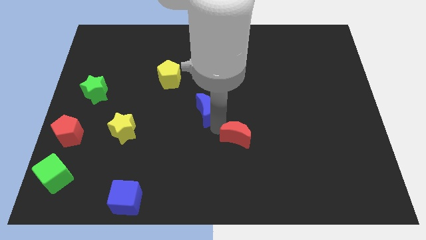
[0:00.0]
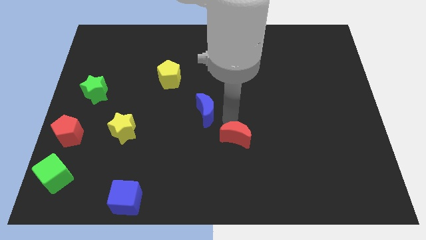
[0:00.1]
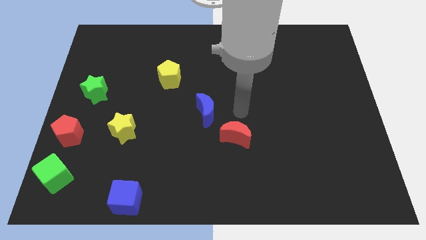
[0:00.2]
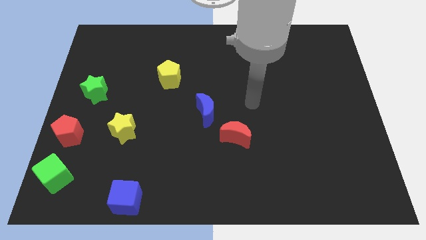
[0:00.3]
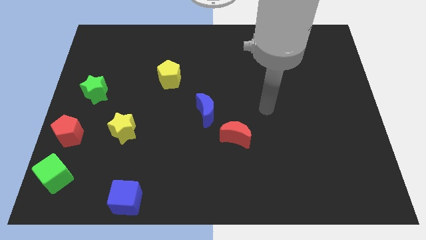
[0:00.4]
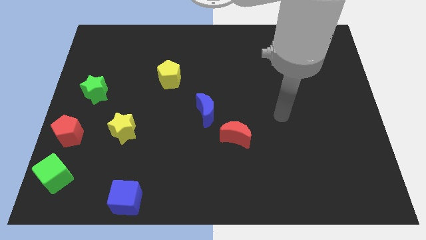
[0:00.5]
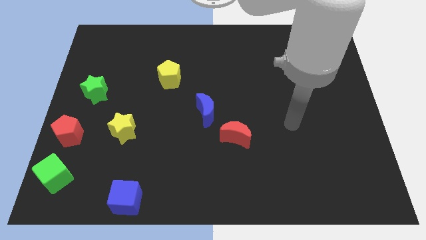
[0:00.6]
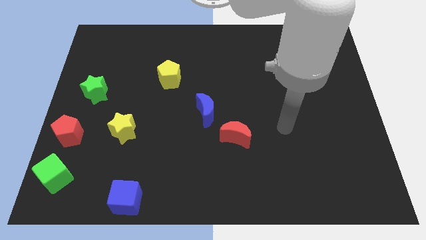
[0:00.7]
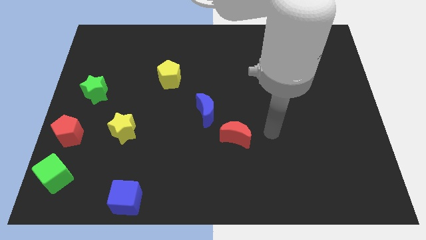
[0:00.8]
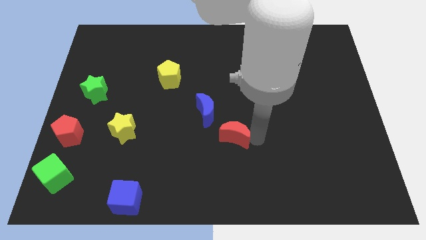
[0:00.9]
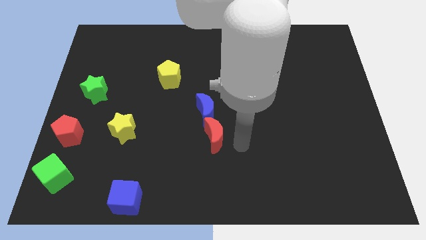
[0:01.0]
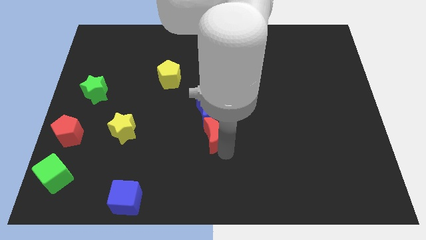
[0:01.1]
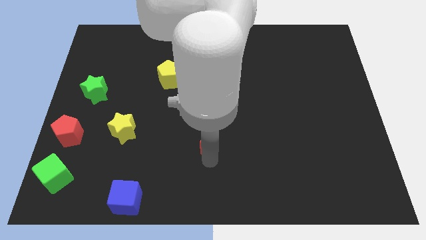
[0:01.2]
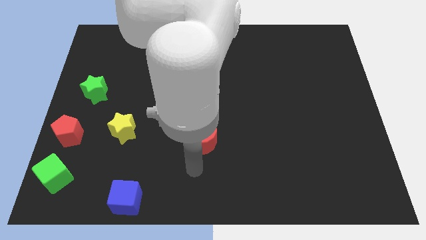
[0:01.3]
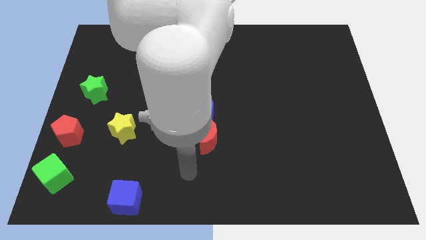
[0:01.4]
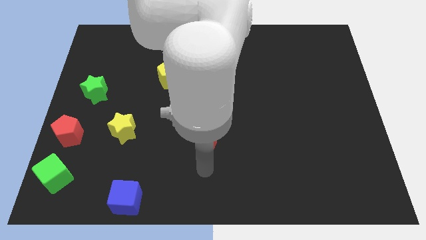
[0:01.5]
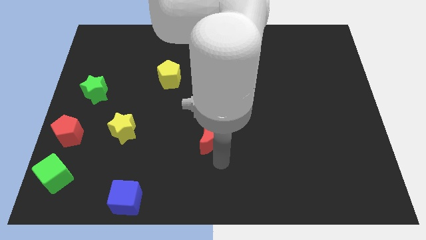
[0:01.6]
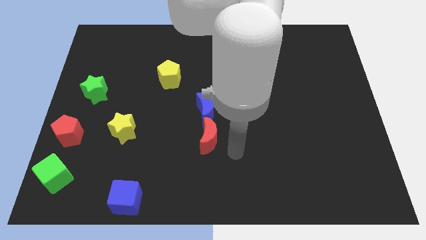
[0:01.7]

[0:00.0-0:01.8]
move the red crescent to the bottom of the blue crescent

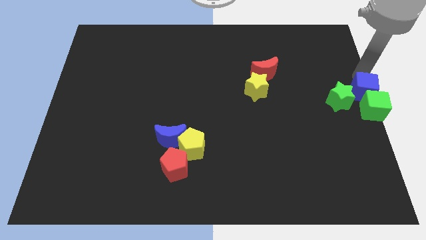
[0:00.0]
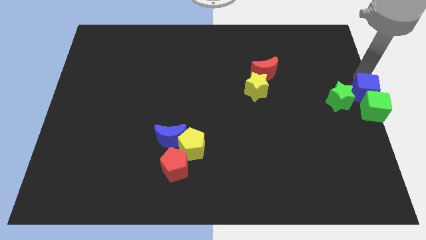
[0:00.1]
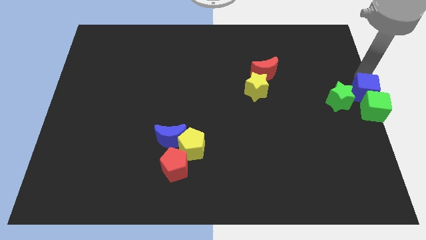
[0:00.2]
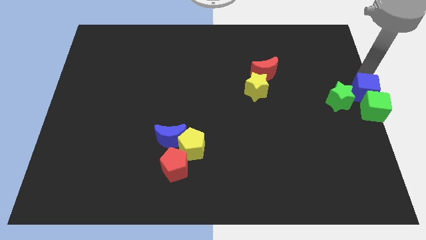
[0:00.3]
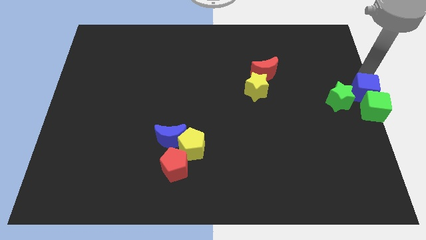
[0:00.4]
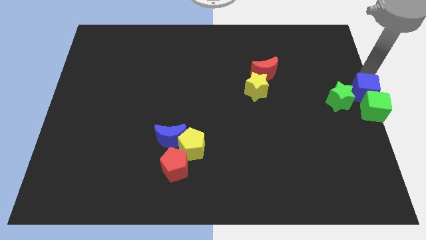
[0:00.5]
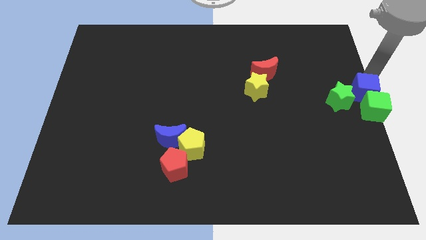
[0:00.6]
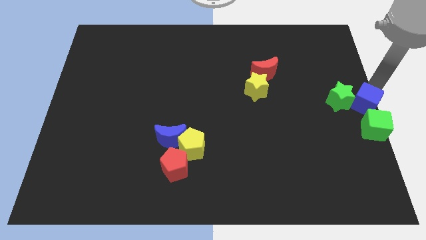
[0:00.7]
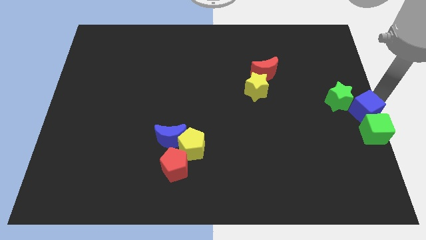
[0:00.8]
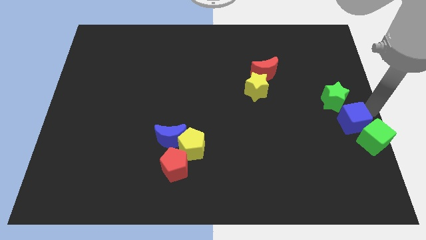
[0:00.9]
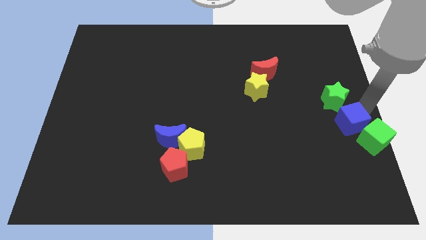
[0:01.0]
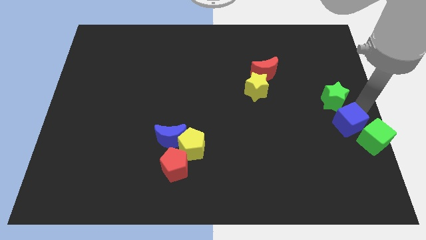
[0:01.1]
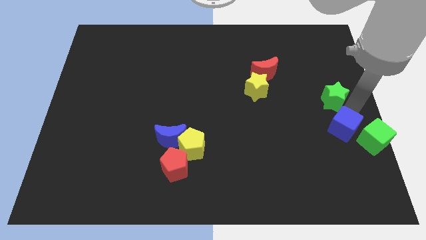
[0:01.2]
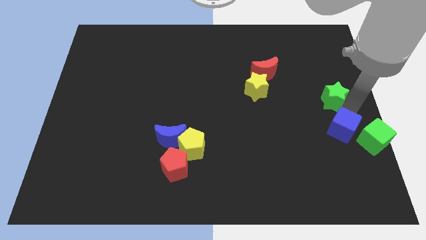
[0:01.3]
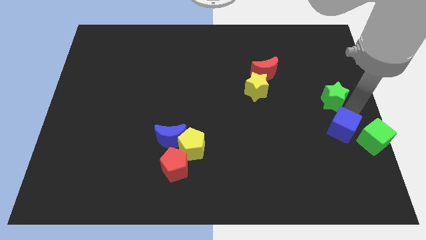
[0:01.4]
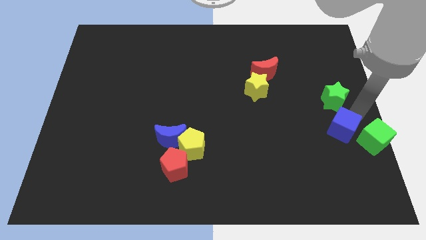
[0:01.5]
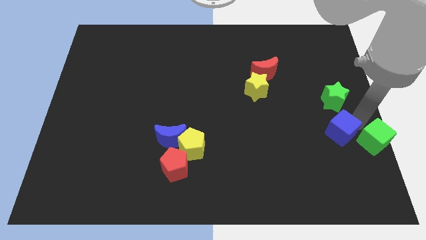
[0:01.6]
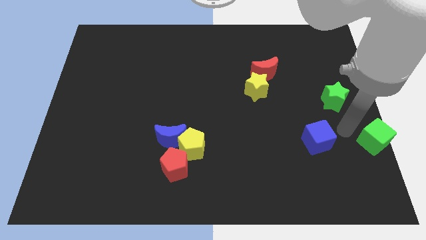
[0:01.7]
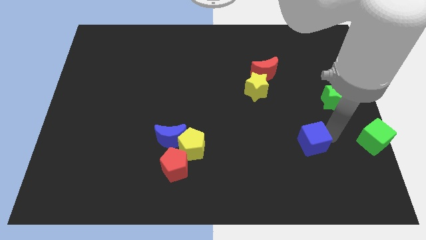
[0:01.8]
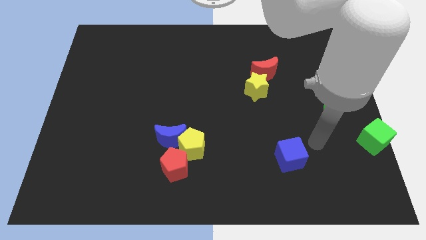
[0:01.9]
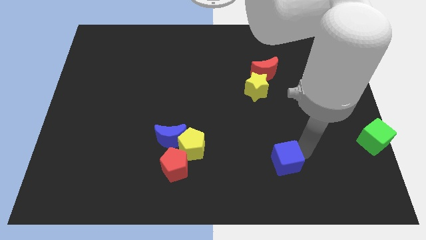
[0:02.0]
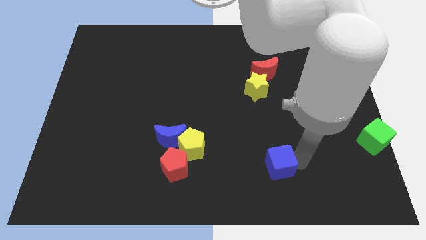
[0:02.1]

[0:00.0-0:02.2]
push the blue cube parallel right to the red pentagon

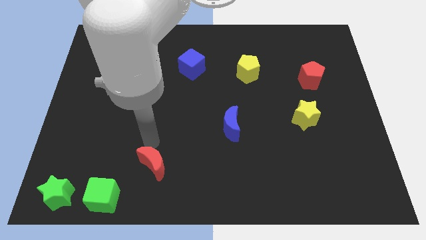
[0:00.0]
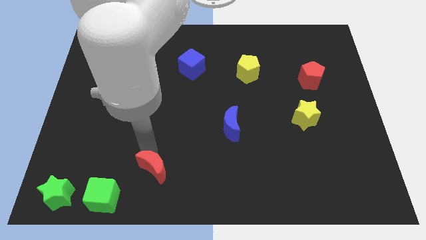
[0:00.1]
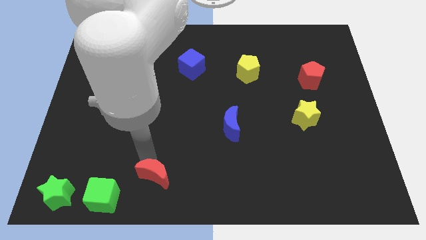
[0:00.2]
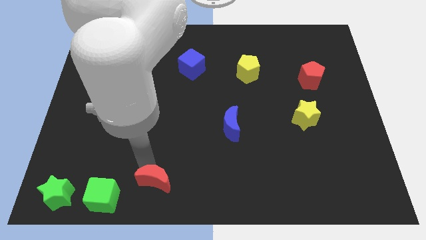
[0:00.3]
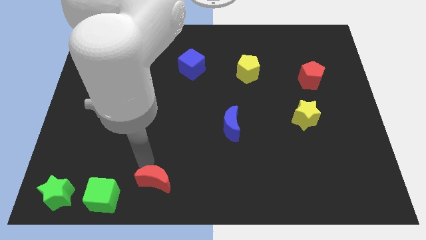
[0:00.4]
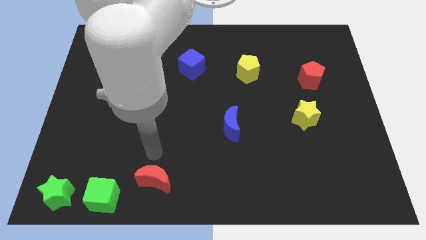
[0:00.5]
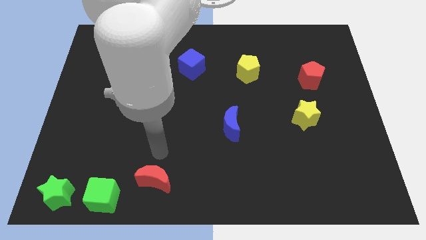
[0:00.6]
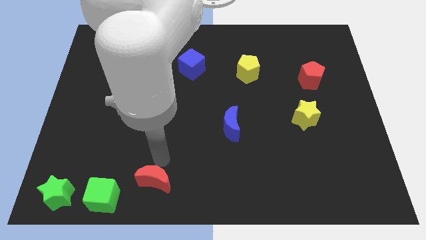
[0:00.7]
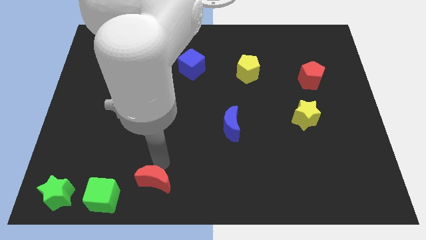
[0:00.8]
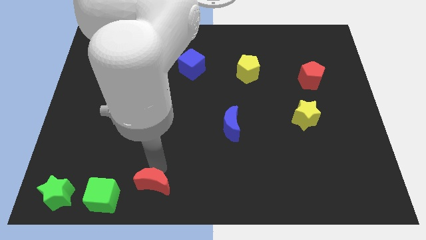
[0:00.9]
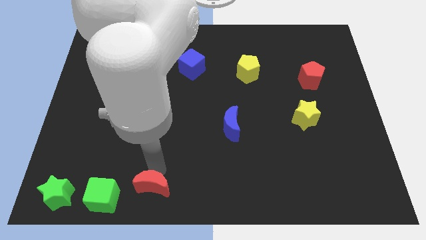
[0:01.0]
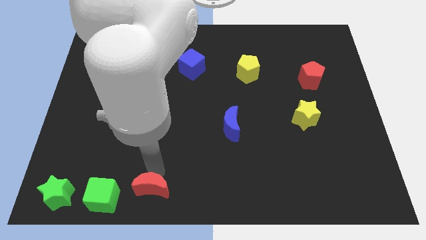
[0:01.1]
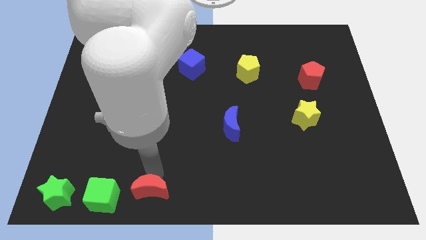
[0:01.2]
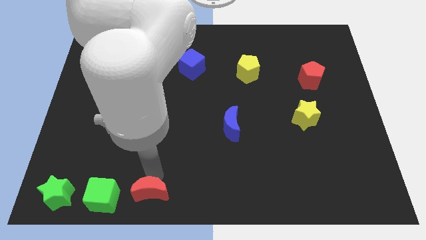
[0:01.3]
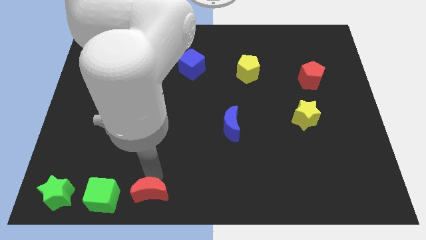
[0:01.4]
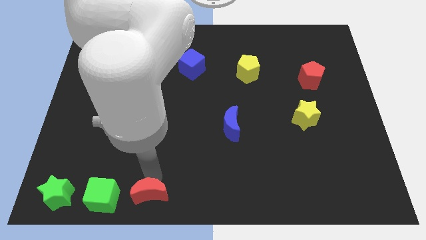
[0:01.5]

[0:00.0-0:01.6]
push the red crescent right to the green cube

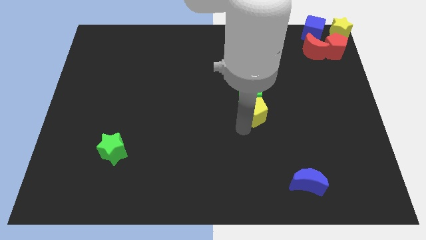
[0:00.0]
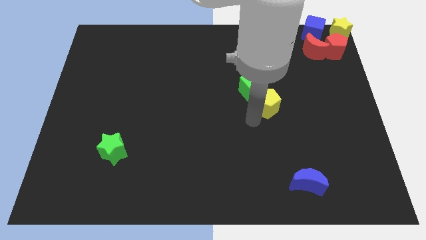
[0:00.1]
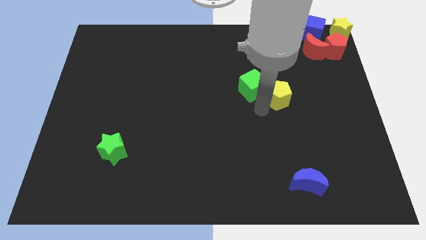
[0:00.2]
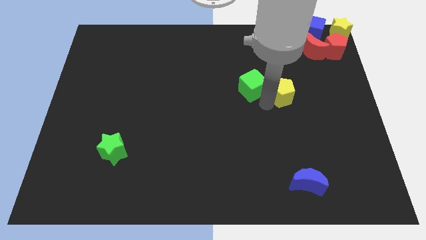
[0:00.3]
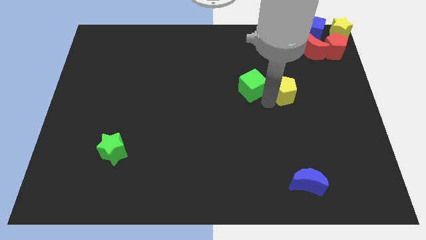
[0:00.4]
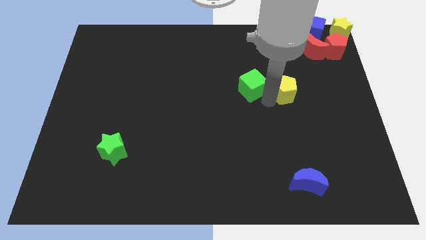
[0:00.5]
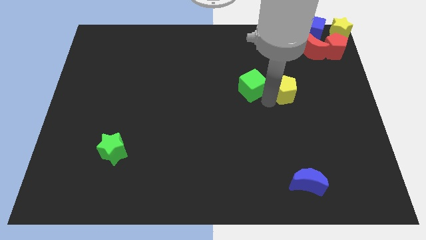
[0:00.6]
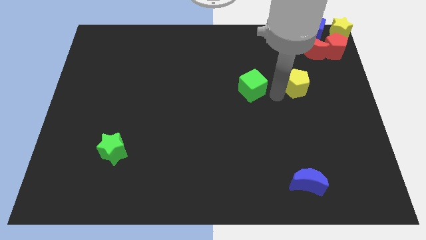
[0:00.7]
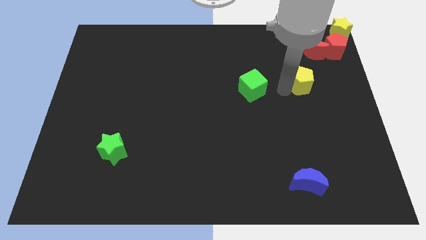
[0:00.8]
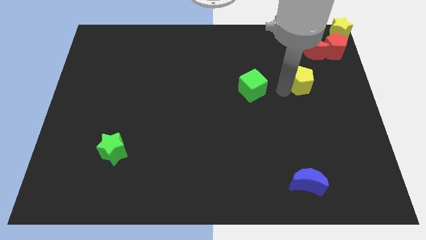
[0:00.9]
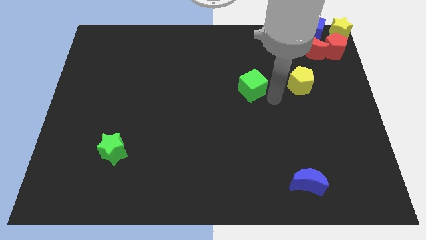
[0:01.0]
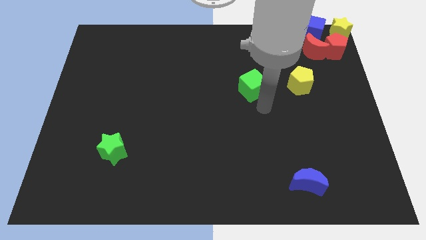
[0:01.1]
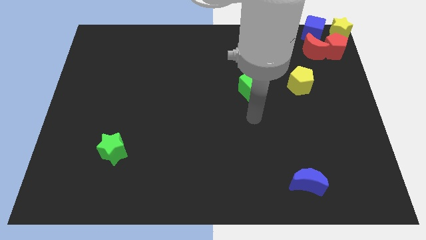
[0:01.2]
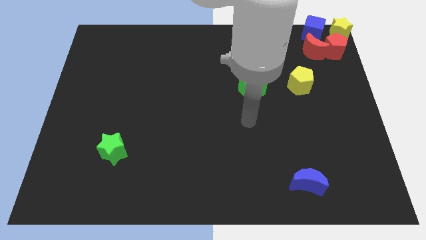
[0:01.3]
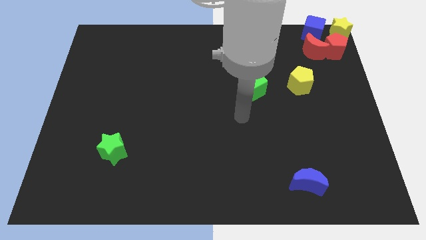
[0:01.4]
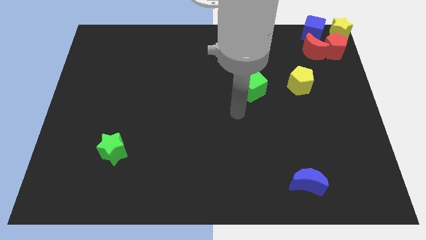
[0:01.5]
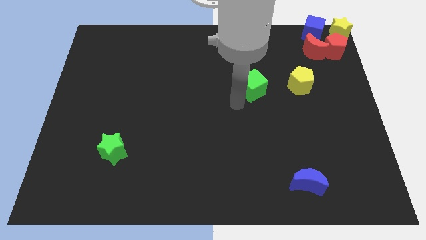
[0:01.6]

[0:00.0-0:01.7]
move yellow pentagon near to red crescent

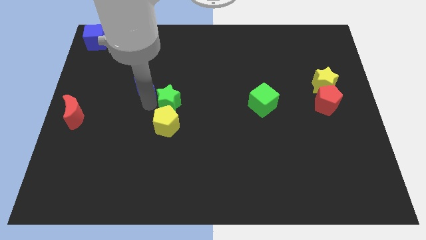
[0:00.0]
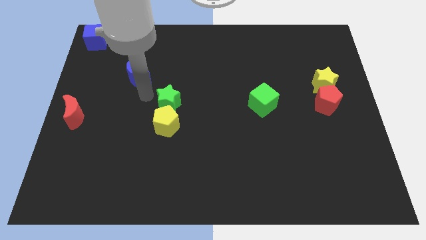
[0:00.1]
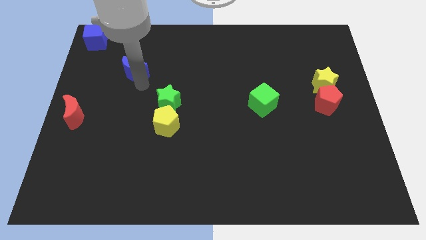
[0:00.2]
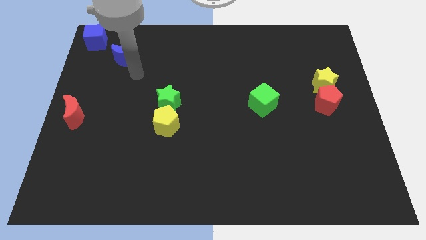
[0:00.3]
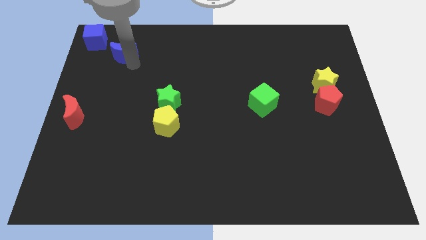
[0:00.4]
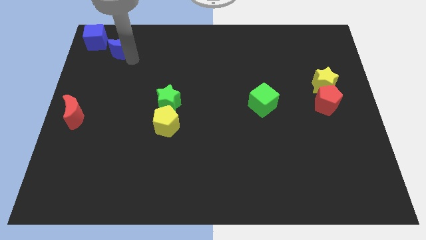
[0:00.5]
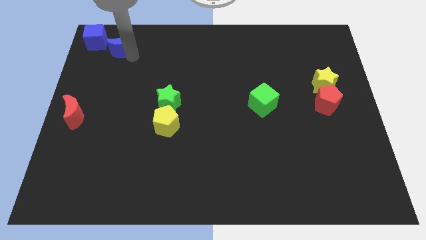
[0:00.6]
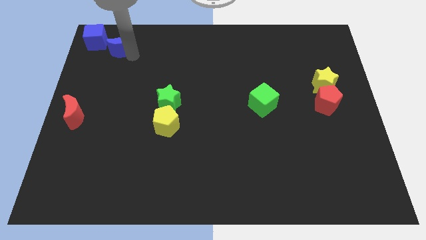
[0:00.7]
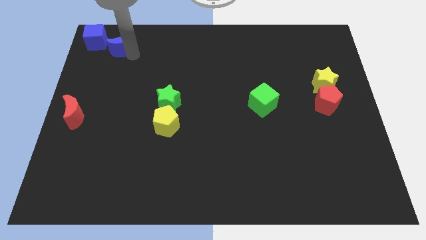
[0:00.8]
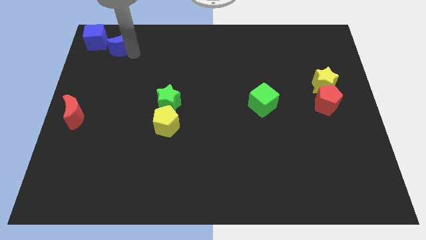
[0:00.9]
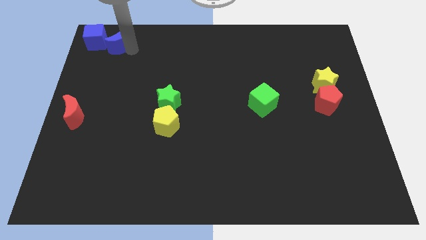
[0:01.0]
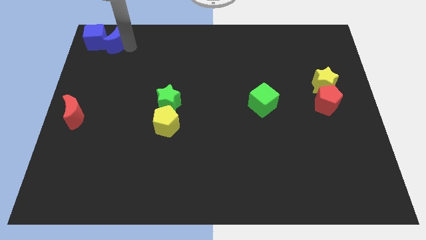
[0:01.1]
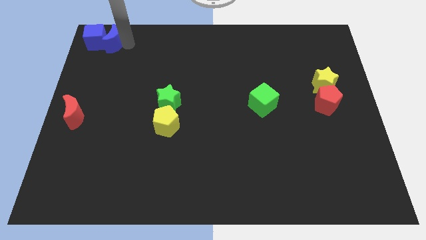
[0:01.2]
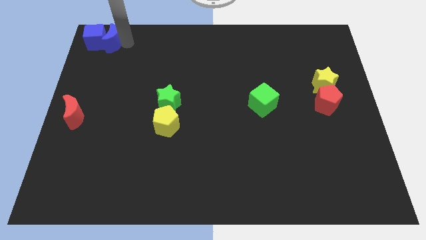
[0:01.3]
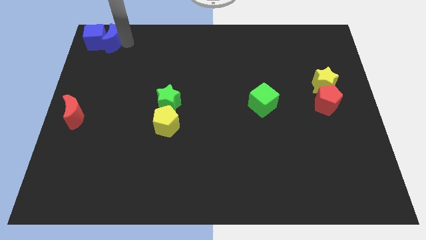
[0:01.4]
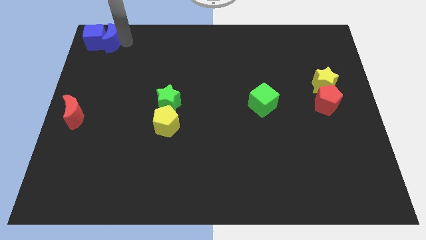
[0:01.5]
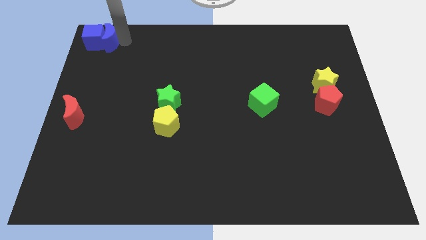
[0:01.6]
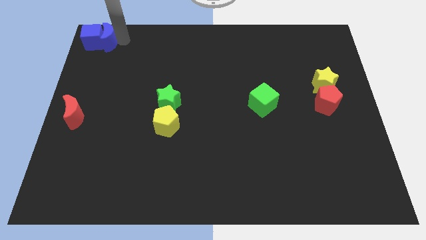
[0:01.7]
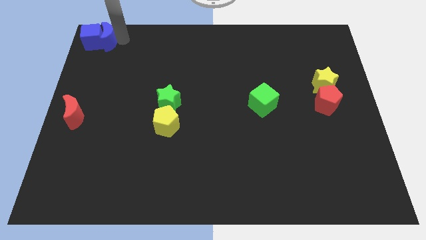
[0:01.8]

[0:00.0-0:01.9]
push the blue moon into the blue cube
